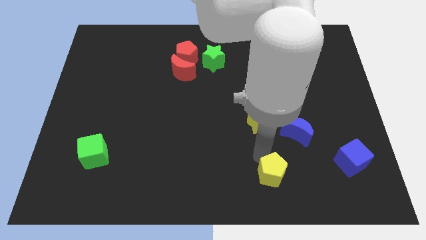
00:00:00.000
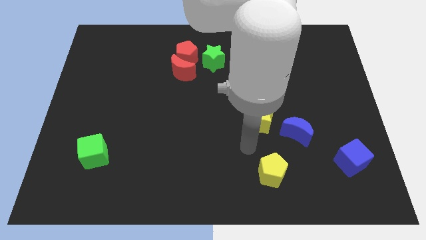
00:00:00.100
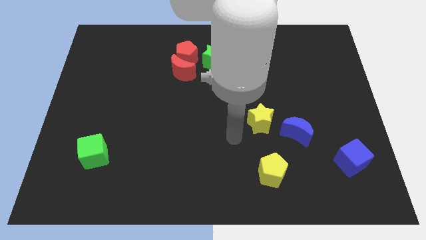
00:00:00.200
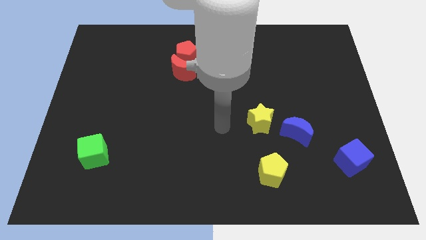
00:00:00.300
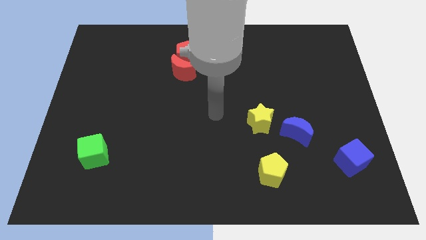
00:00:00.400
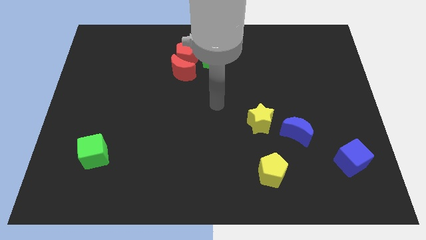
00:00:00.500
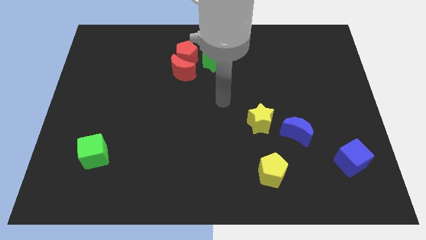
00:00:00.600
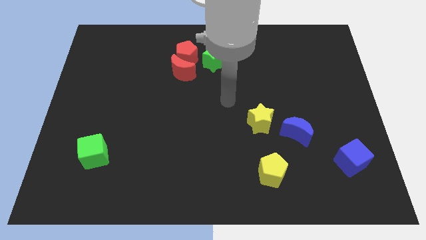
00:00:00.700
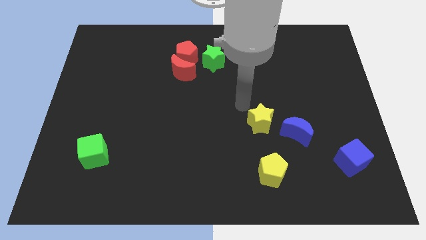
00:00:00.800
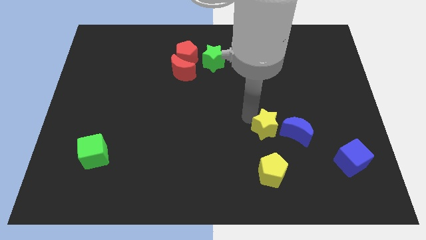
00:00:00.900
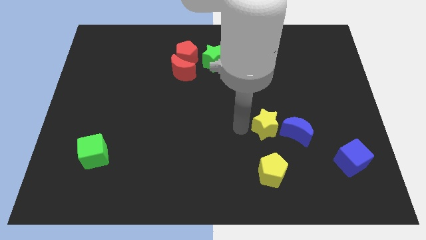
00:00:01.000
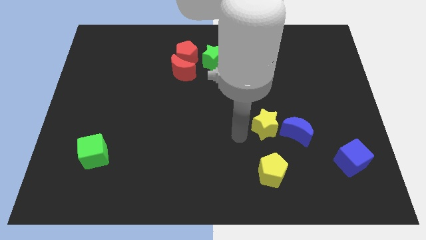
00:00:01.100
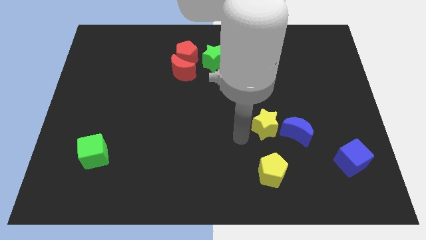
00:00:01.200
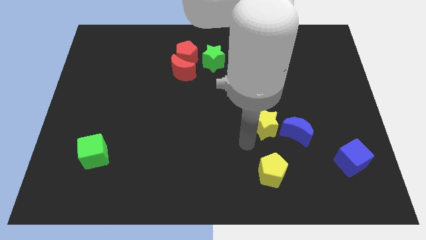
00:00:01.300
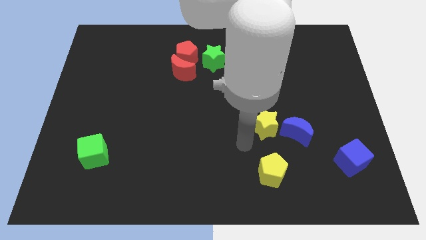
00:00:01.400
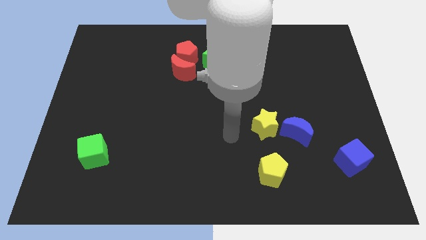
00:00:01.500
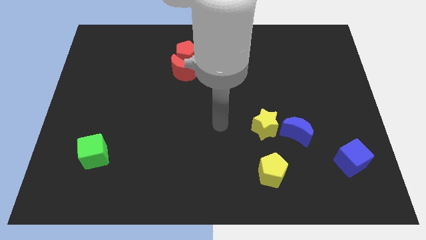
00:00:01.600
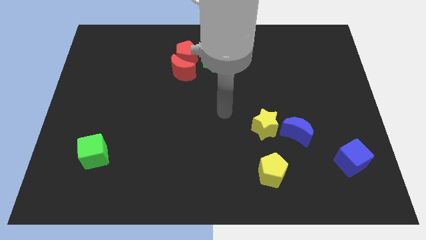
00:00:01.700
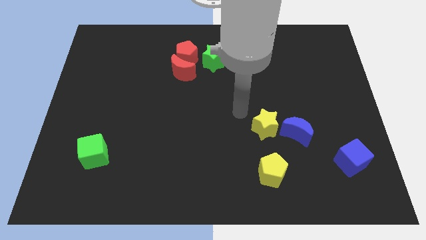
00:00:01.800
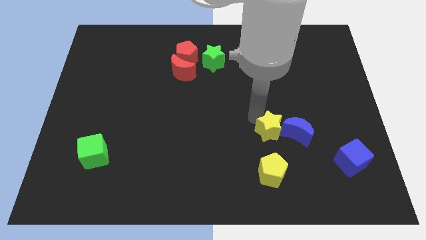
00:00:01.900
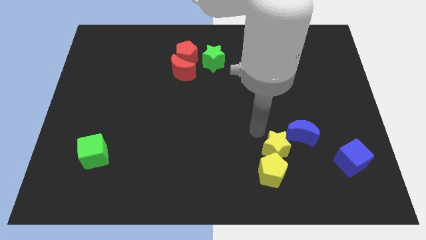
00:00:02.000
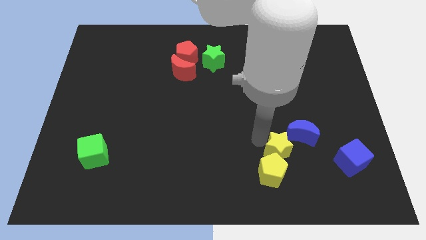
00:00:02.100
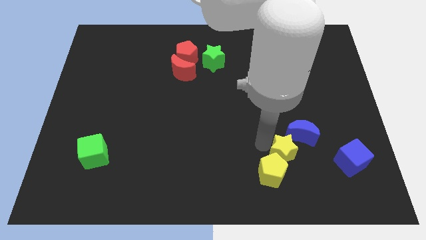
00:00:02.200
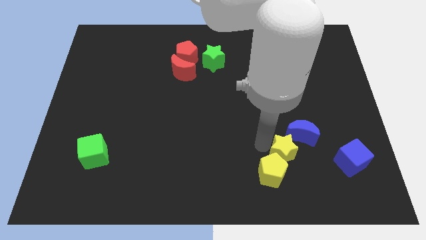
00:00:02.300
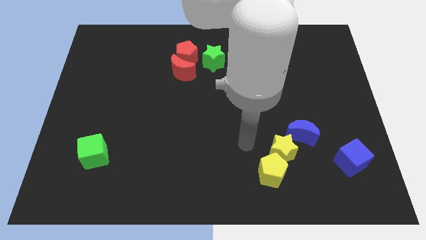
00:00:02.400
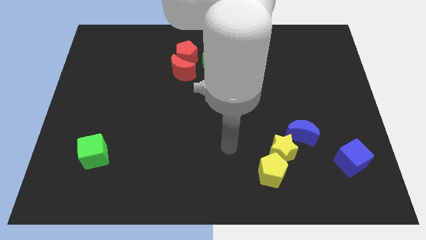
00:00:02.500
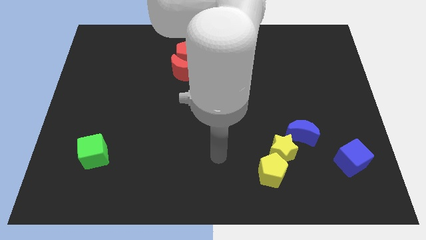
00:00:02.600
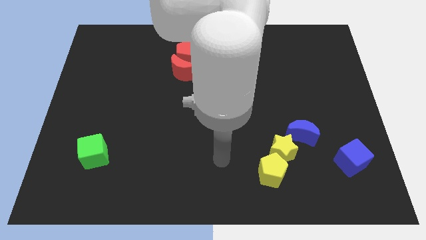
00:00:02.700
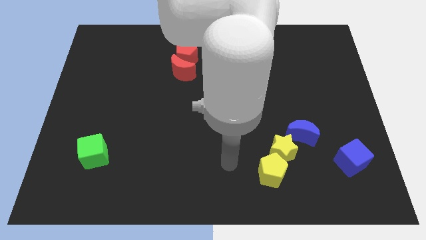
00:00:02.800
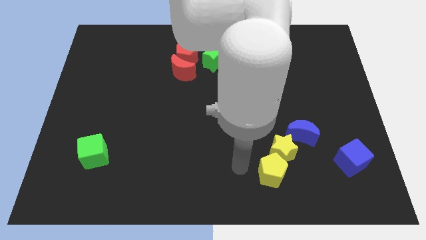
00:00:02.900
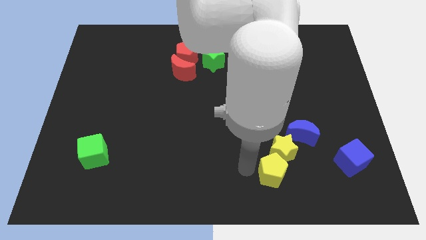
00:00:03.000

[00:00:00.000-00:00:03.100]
push the yellow star into the blue moon

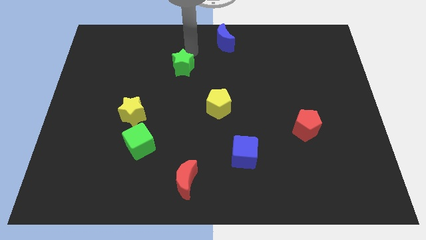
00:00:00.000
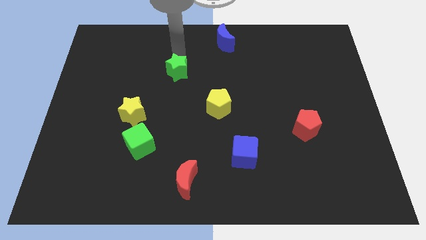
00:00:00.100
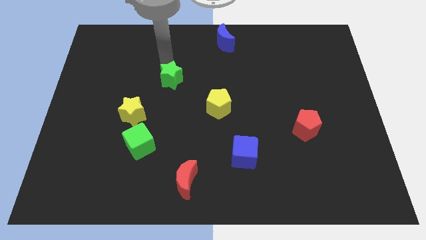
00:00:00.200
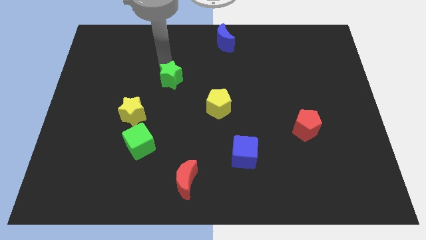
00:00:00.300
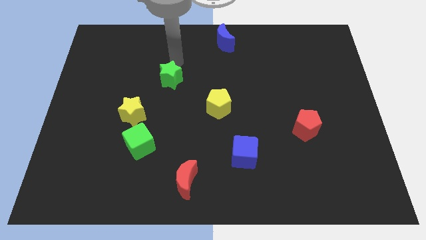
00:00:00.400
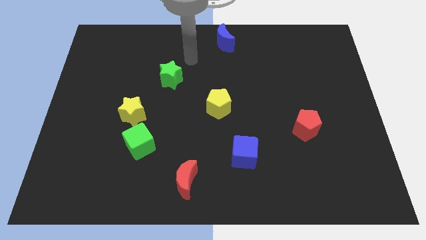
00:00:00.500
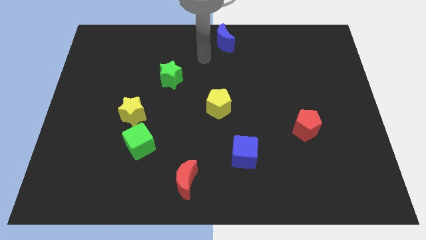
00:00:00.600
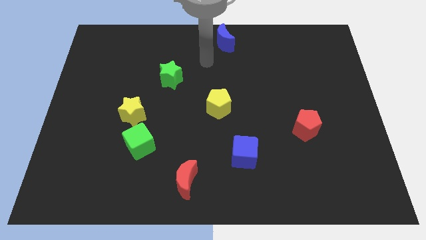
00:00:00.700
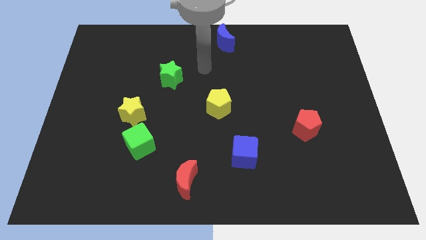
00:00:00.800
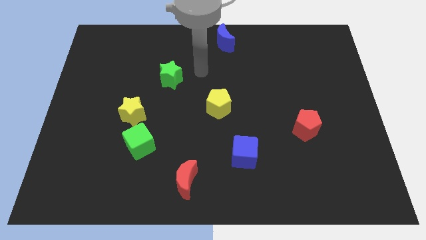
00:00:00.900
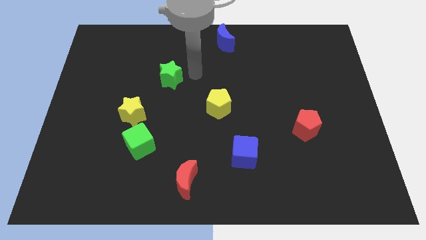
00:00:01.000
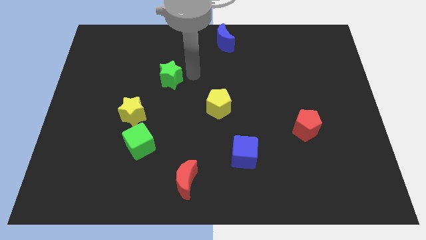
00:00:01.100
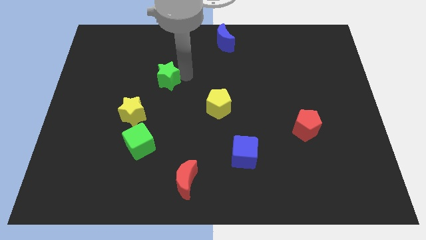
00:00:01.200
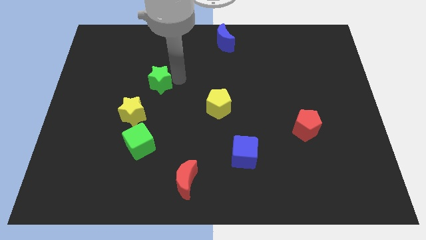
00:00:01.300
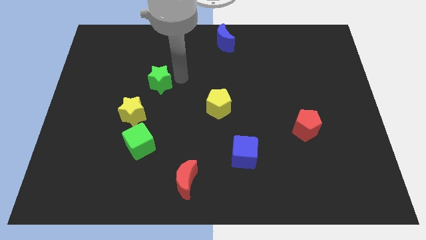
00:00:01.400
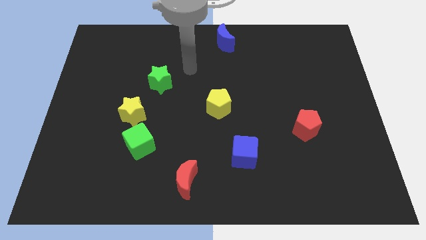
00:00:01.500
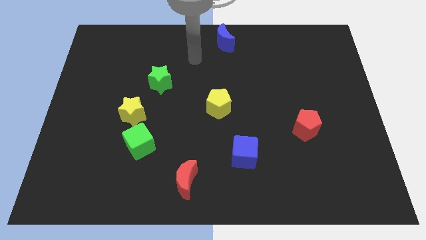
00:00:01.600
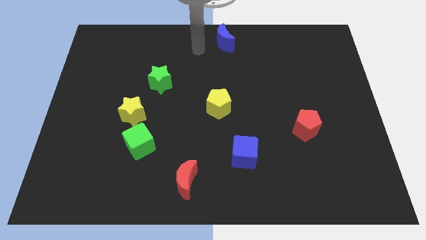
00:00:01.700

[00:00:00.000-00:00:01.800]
push the green star down towards the yellow star

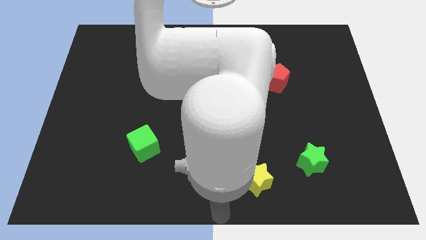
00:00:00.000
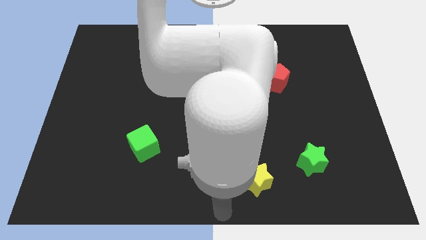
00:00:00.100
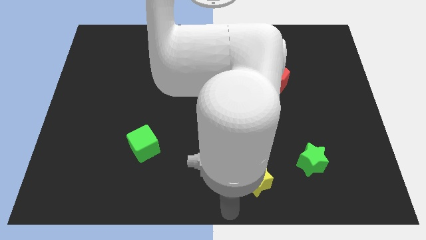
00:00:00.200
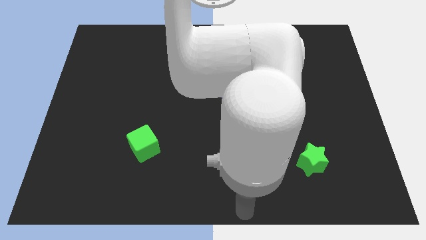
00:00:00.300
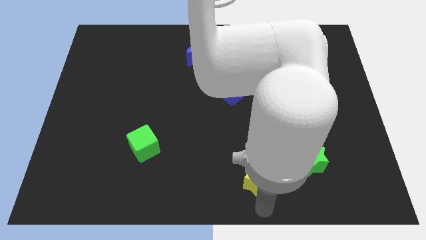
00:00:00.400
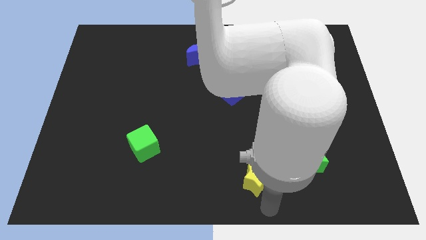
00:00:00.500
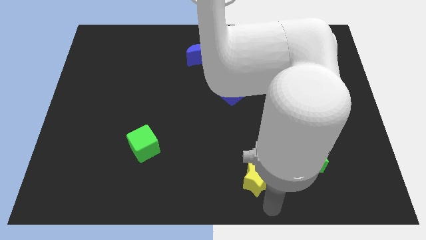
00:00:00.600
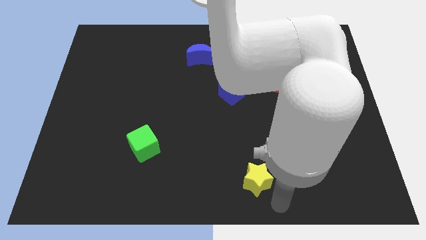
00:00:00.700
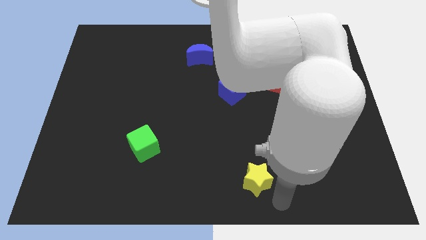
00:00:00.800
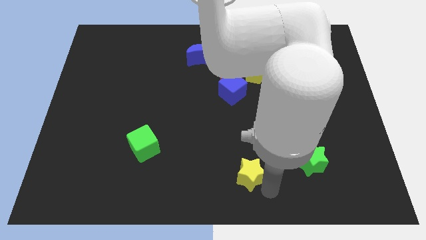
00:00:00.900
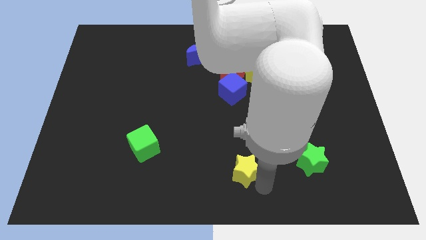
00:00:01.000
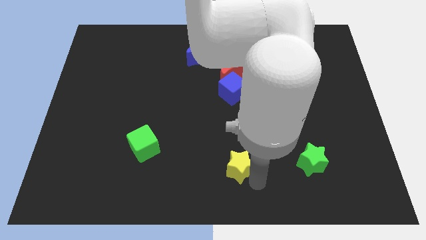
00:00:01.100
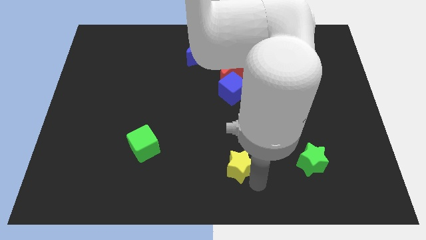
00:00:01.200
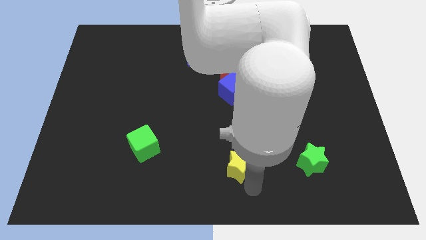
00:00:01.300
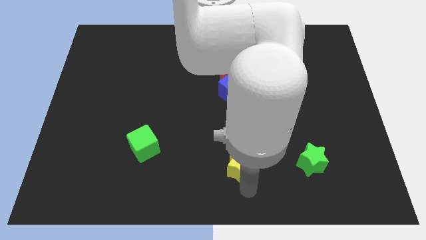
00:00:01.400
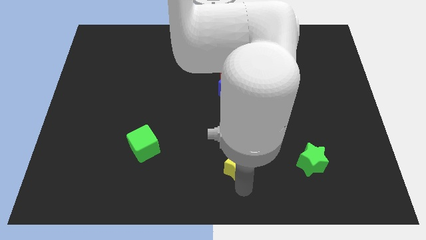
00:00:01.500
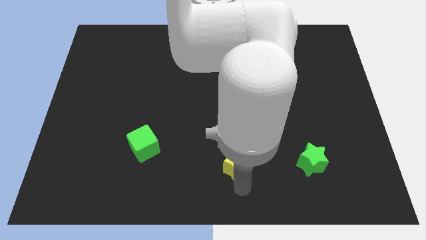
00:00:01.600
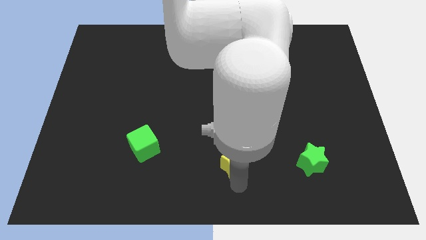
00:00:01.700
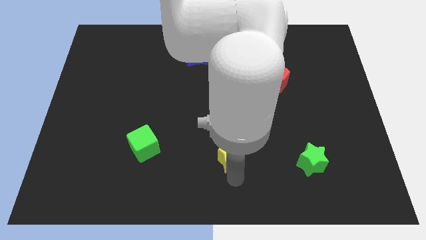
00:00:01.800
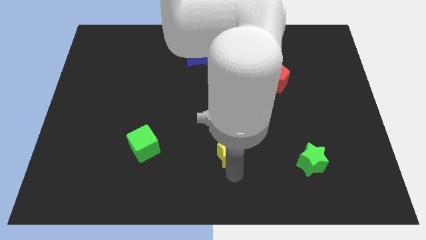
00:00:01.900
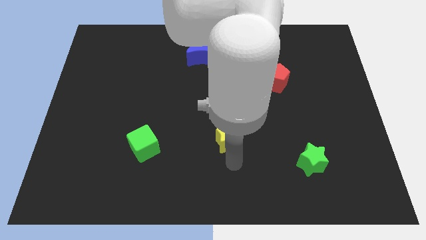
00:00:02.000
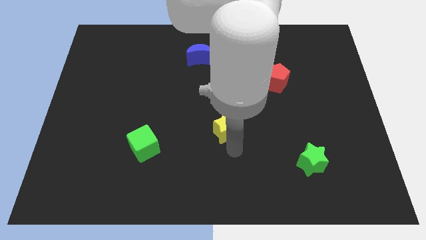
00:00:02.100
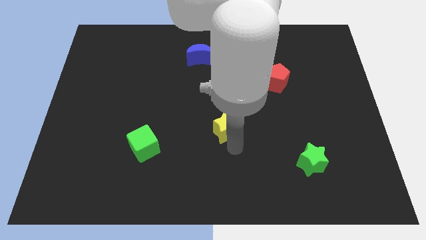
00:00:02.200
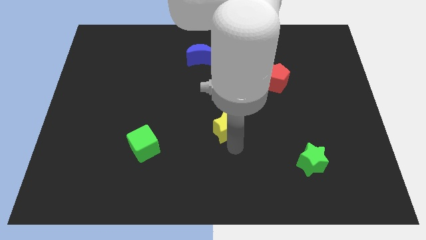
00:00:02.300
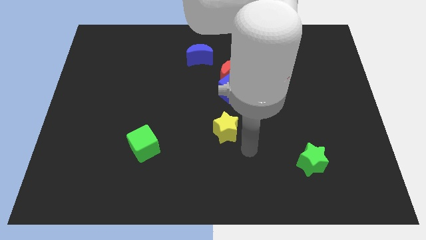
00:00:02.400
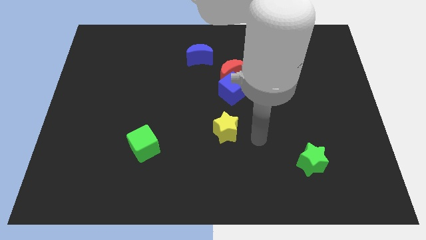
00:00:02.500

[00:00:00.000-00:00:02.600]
push yellow star towards blue cube

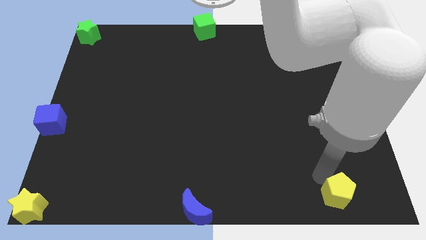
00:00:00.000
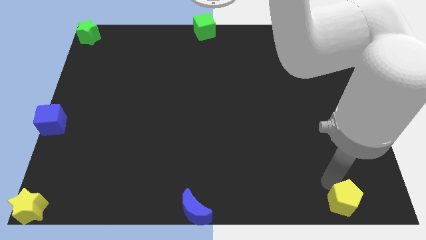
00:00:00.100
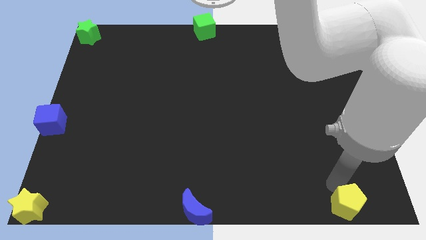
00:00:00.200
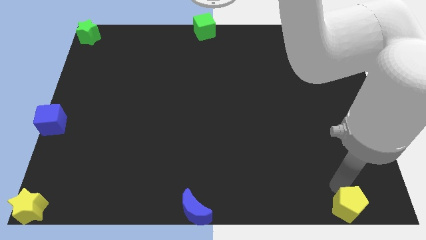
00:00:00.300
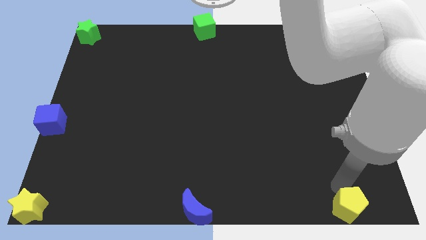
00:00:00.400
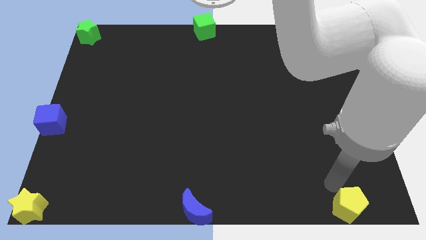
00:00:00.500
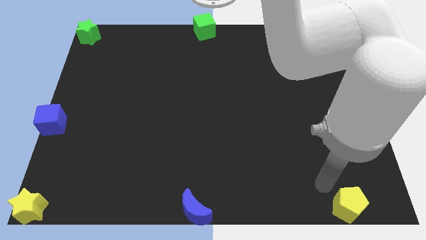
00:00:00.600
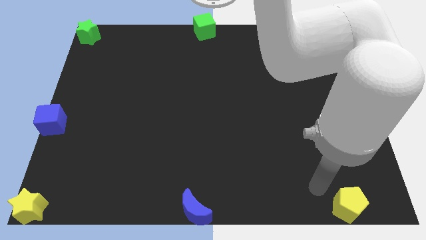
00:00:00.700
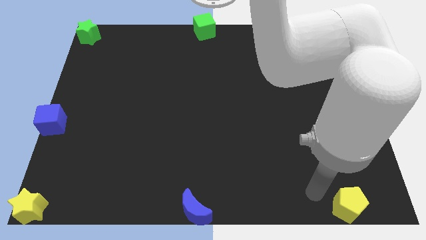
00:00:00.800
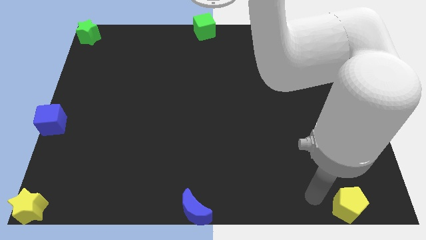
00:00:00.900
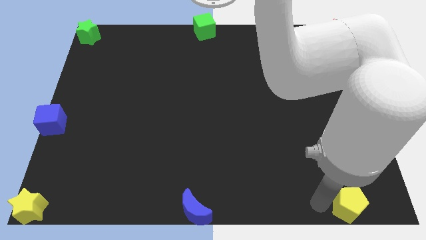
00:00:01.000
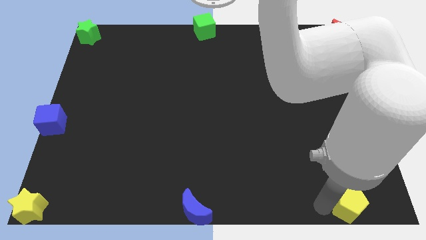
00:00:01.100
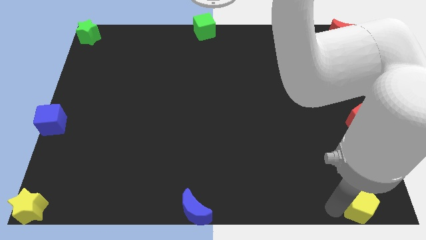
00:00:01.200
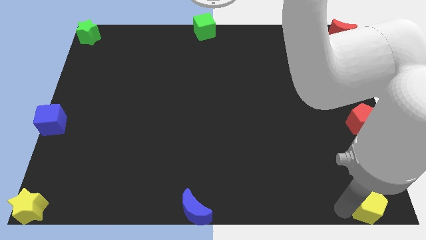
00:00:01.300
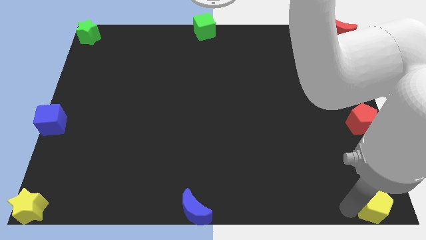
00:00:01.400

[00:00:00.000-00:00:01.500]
slide the yellow pentagon to the bottom right of the board
